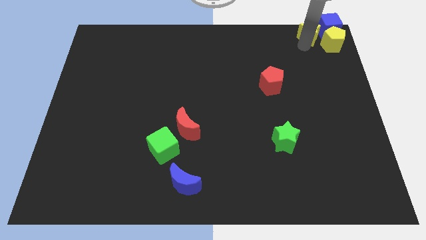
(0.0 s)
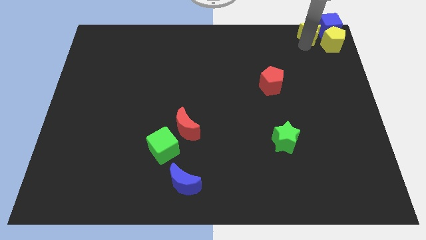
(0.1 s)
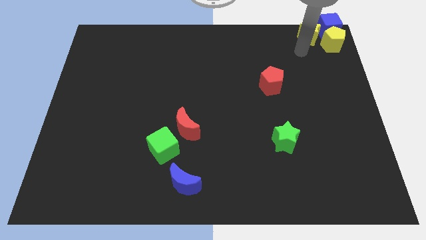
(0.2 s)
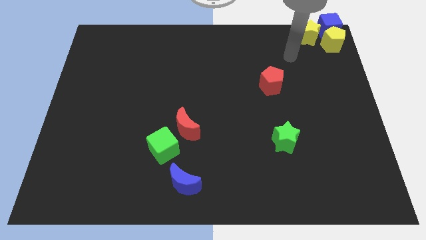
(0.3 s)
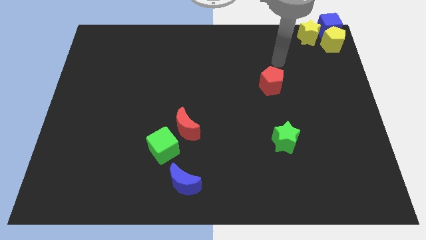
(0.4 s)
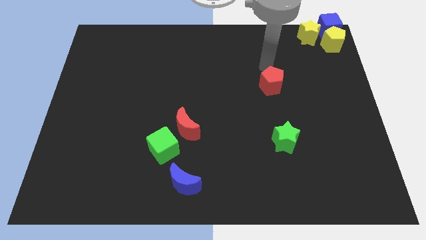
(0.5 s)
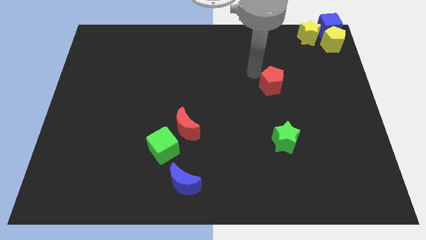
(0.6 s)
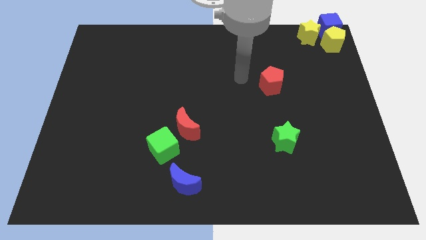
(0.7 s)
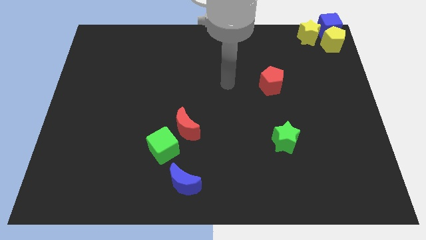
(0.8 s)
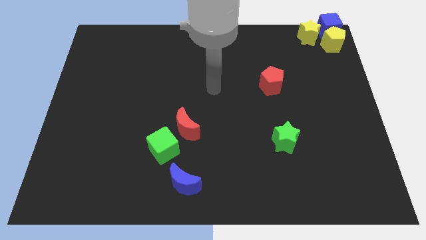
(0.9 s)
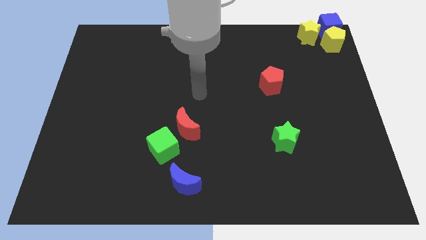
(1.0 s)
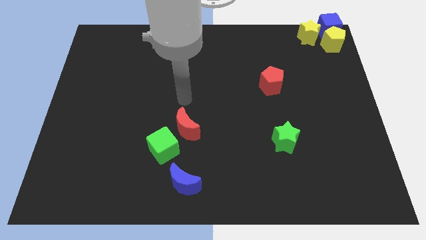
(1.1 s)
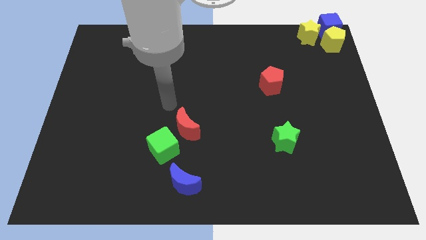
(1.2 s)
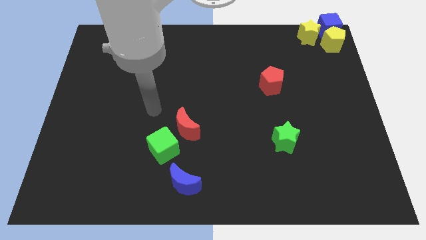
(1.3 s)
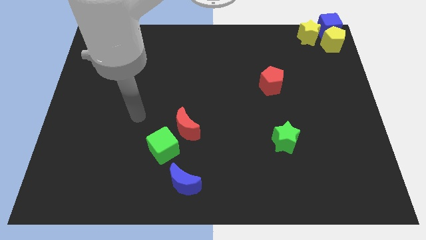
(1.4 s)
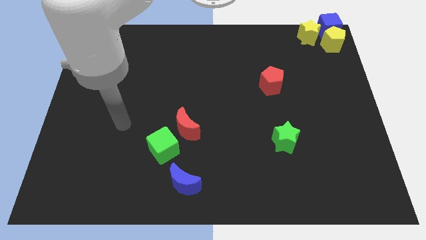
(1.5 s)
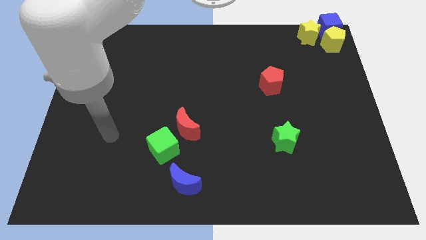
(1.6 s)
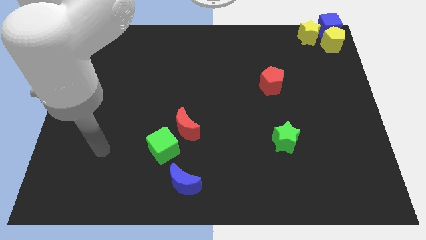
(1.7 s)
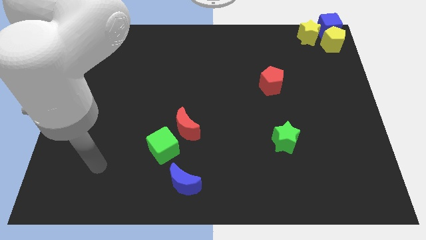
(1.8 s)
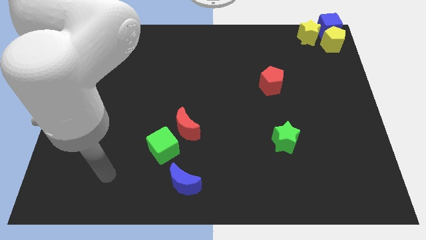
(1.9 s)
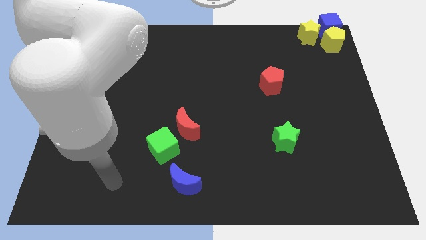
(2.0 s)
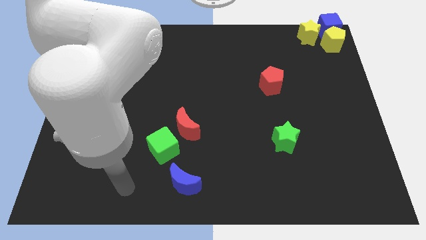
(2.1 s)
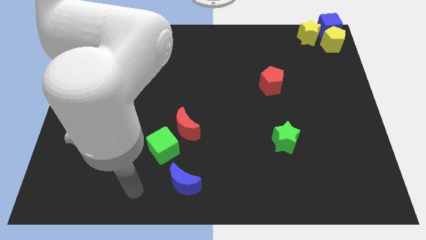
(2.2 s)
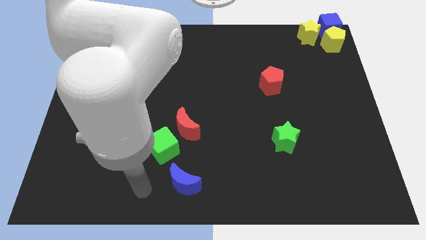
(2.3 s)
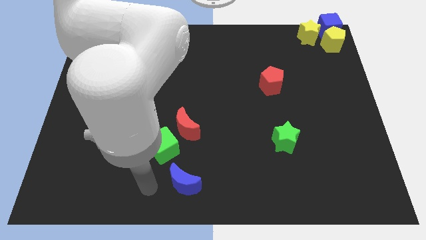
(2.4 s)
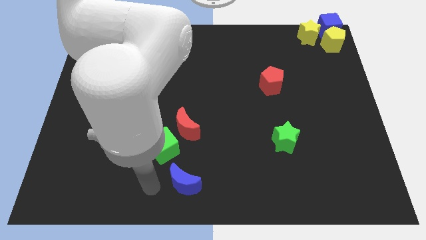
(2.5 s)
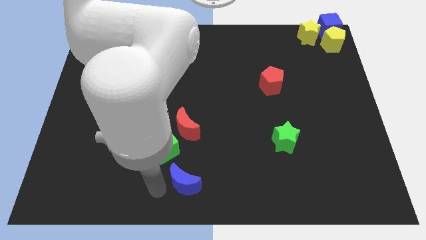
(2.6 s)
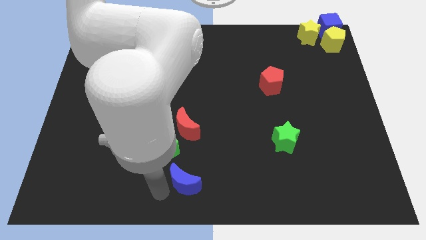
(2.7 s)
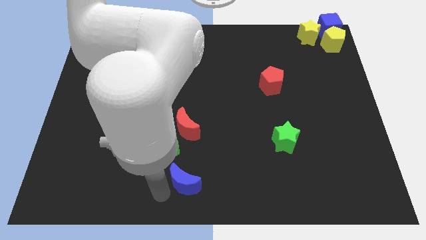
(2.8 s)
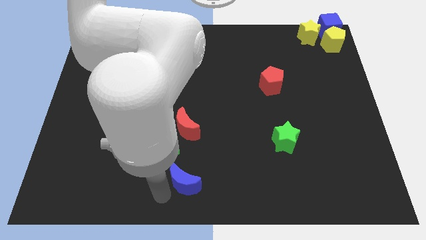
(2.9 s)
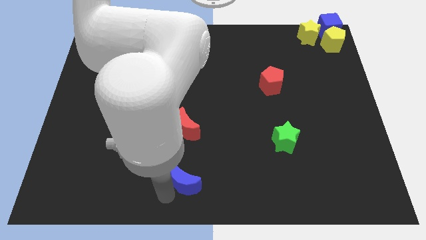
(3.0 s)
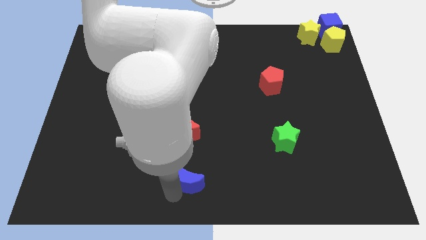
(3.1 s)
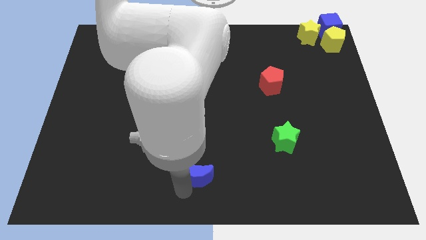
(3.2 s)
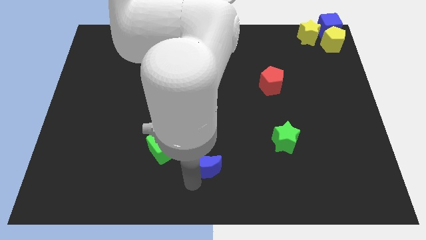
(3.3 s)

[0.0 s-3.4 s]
point the arm below the blue moon

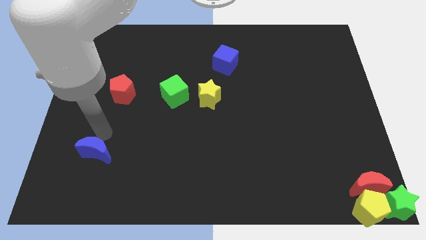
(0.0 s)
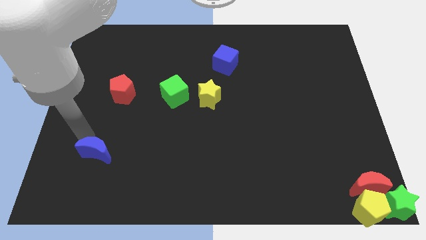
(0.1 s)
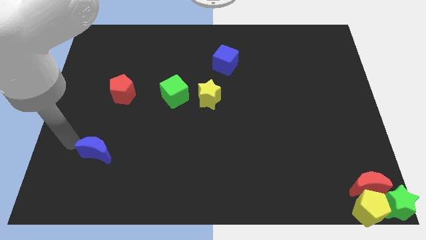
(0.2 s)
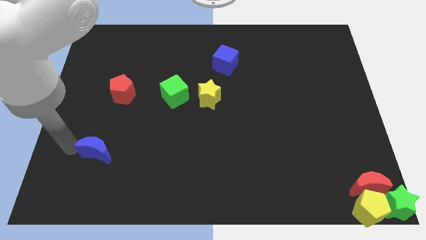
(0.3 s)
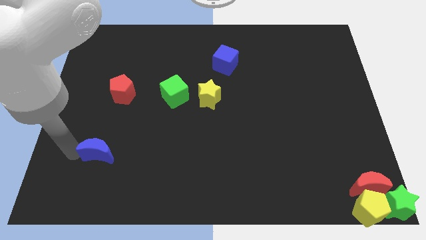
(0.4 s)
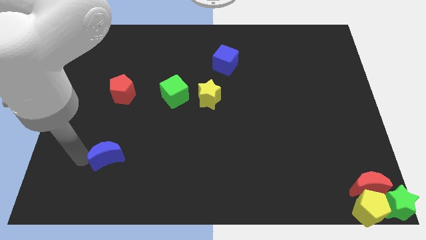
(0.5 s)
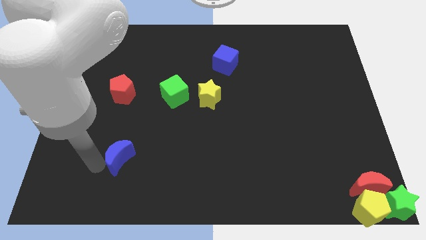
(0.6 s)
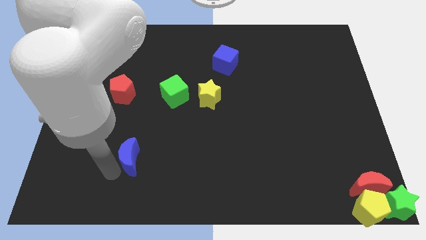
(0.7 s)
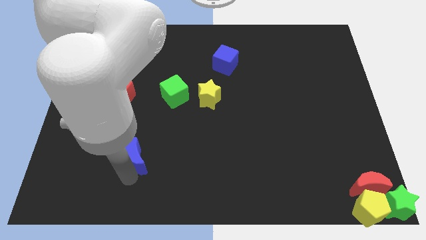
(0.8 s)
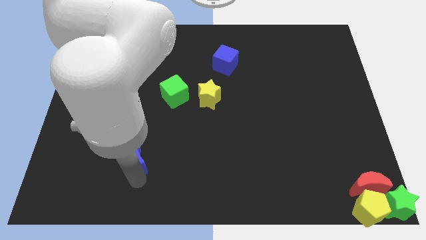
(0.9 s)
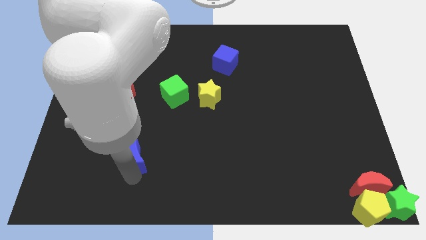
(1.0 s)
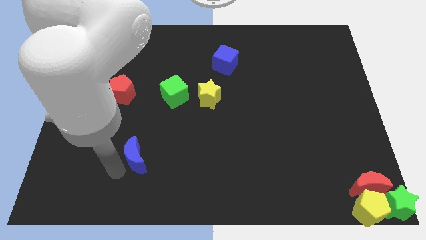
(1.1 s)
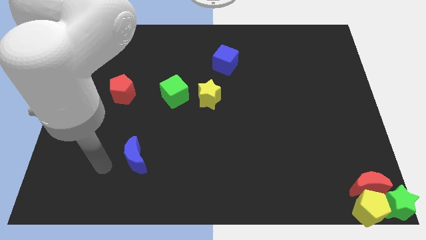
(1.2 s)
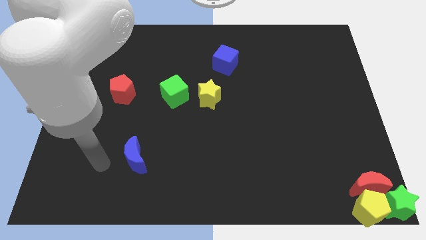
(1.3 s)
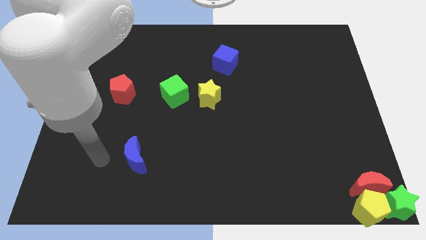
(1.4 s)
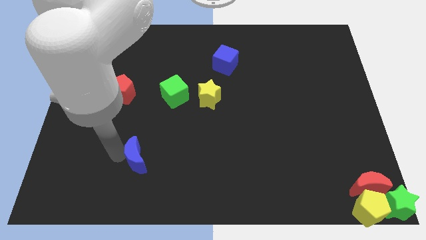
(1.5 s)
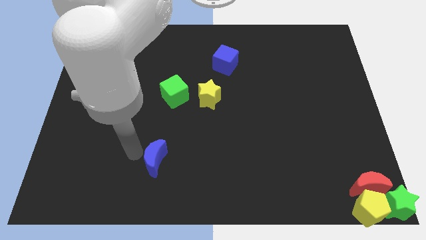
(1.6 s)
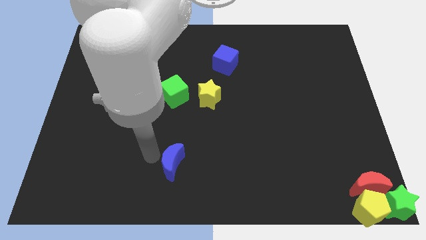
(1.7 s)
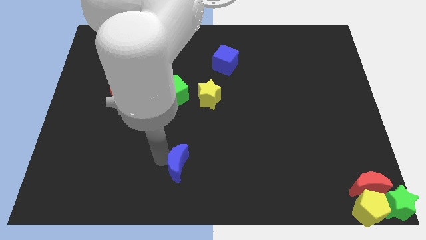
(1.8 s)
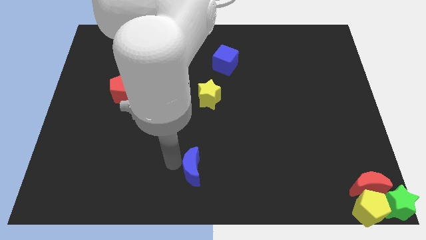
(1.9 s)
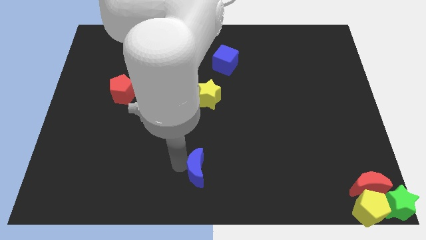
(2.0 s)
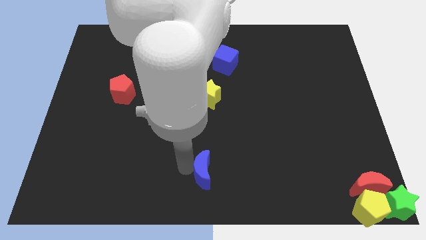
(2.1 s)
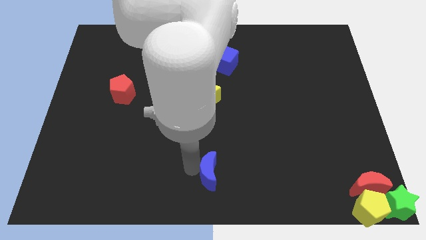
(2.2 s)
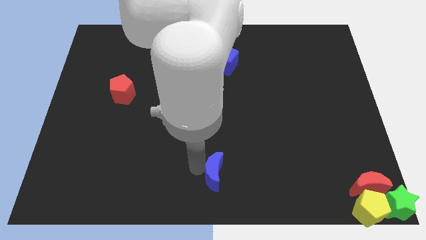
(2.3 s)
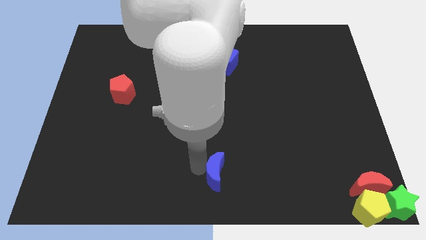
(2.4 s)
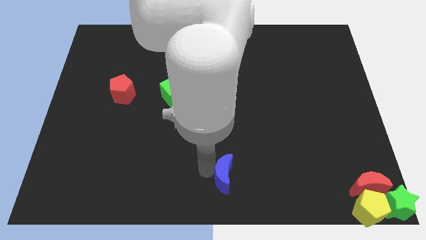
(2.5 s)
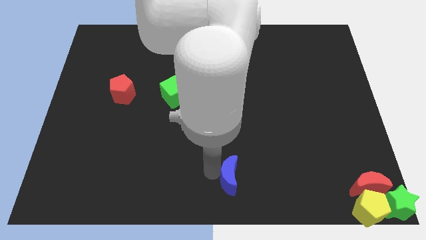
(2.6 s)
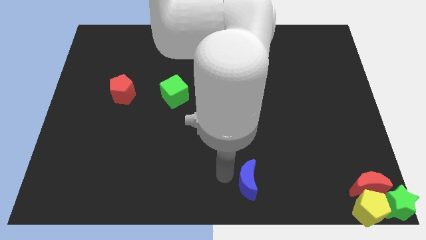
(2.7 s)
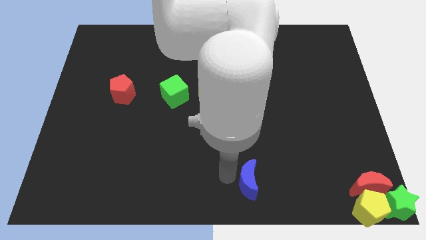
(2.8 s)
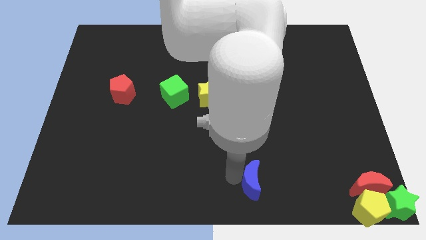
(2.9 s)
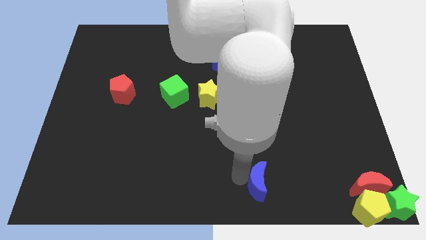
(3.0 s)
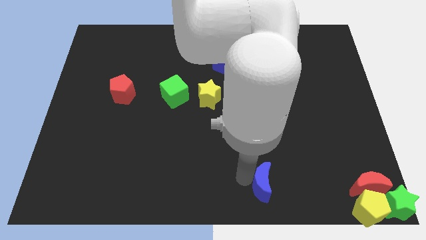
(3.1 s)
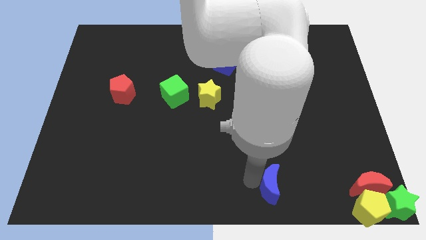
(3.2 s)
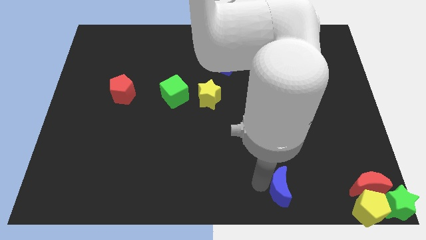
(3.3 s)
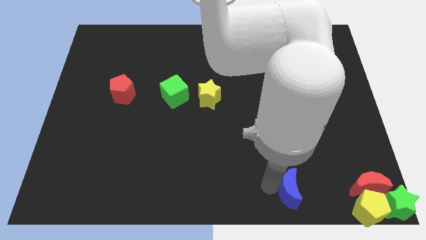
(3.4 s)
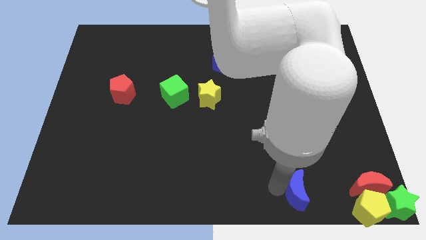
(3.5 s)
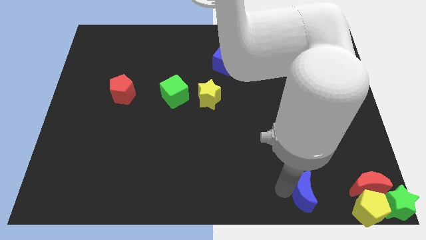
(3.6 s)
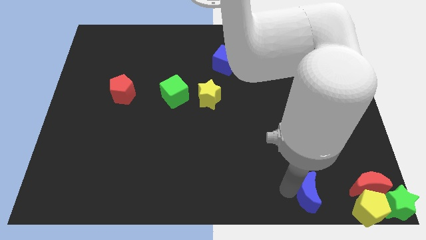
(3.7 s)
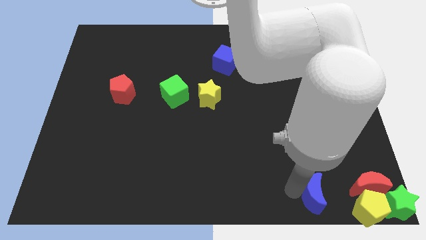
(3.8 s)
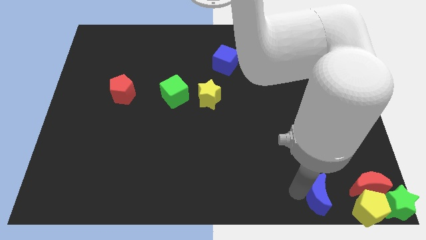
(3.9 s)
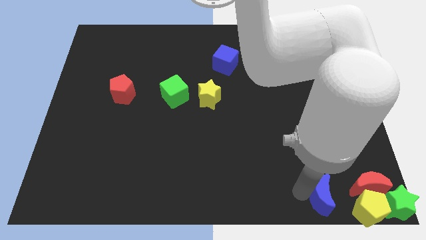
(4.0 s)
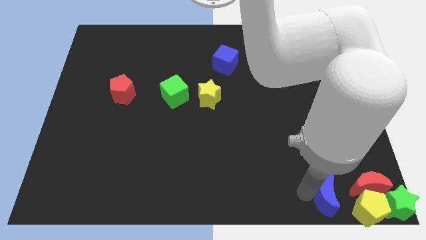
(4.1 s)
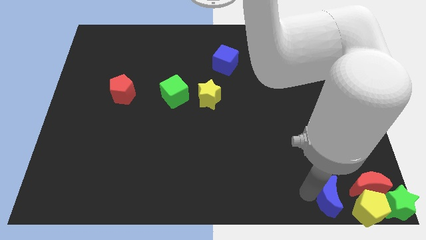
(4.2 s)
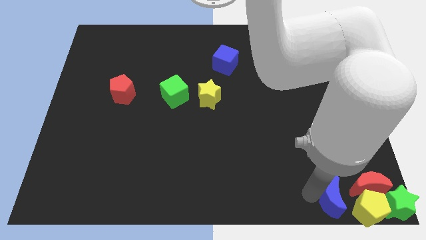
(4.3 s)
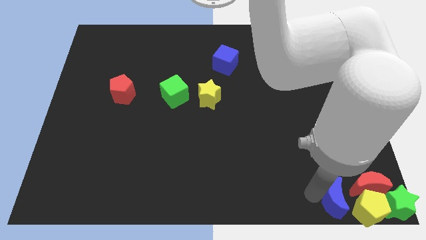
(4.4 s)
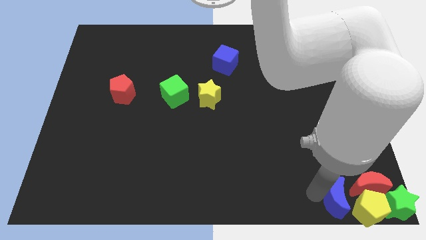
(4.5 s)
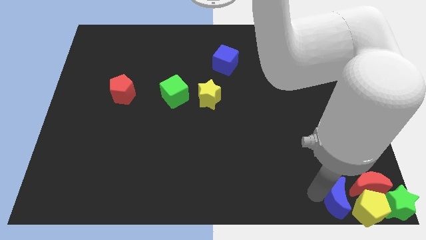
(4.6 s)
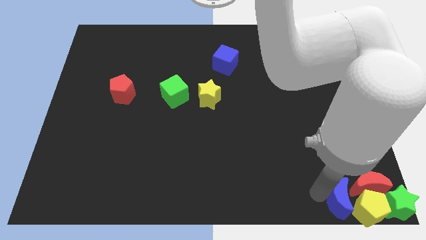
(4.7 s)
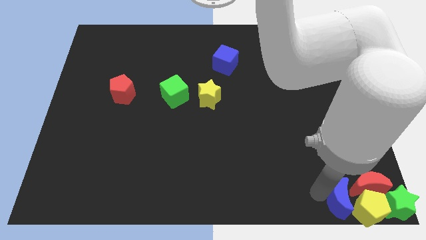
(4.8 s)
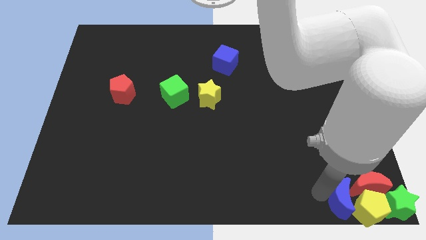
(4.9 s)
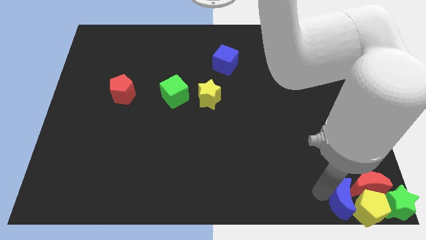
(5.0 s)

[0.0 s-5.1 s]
move the blue moon to left of red moon and yellow pentagon

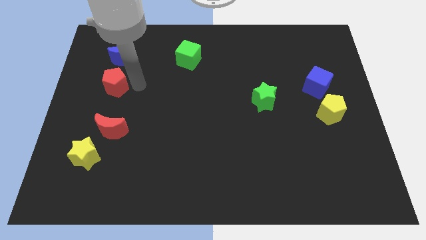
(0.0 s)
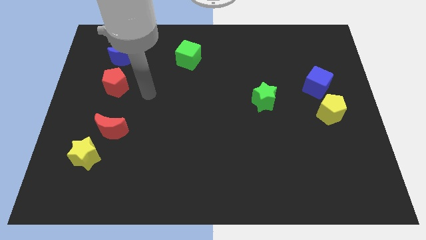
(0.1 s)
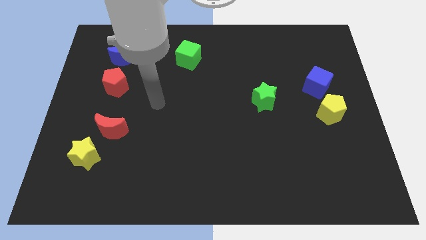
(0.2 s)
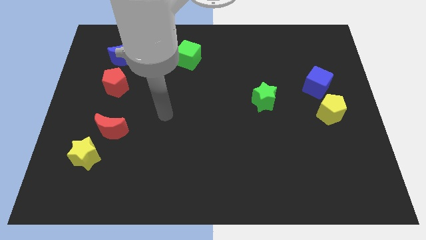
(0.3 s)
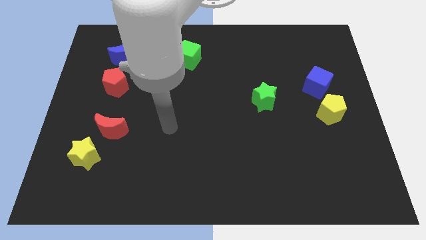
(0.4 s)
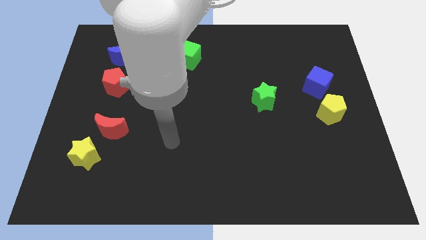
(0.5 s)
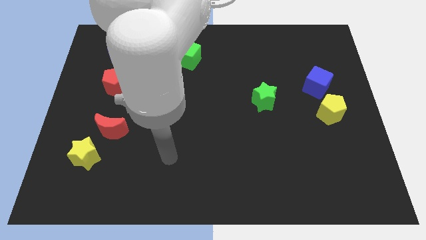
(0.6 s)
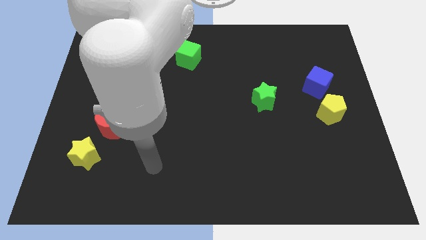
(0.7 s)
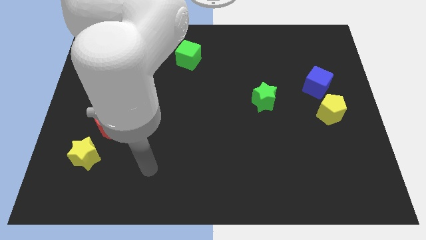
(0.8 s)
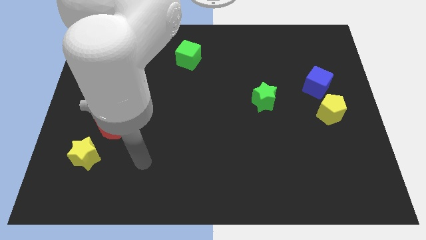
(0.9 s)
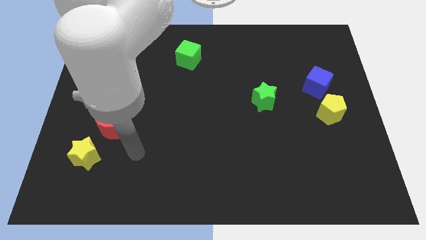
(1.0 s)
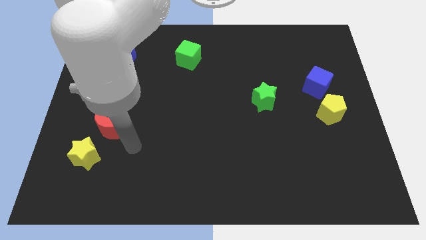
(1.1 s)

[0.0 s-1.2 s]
move your arm towards the red crescent
